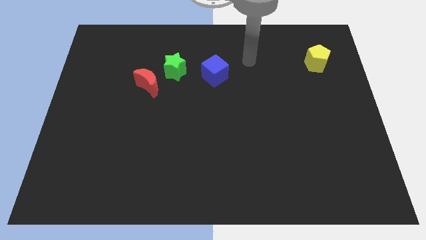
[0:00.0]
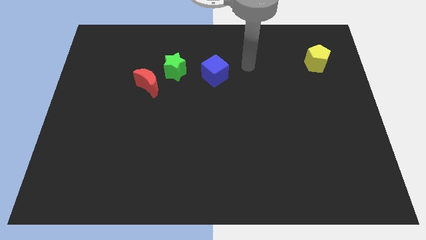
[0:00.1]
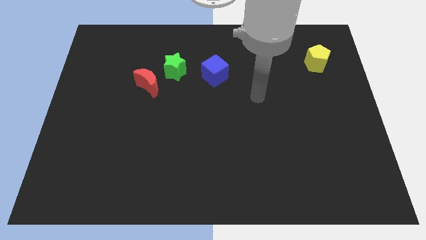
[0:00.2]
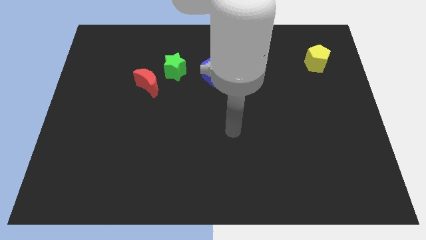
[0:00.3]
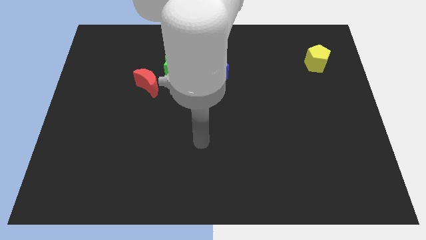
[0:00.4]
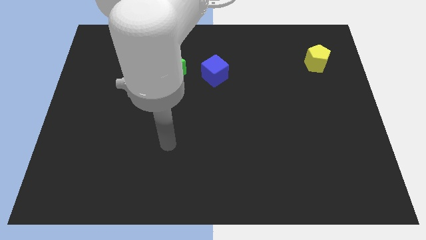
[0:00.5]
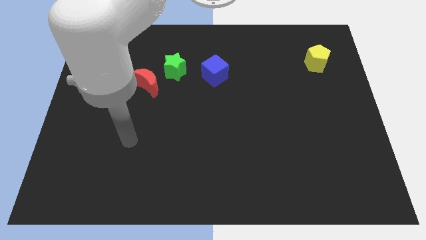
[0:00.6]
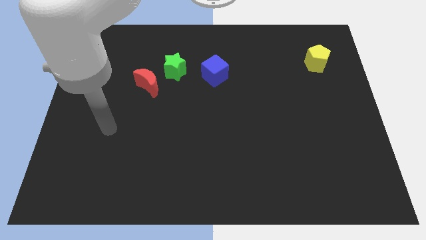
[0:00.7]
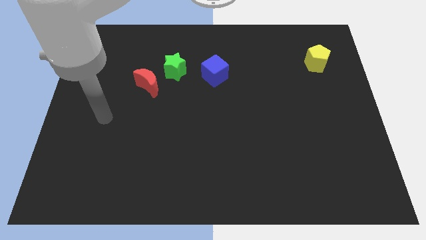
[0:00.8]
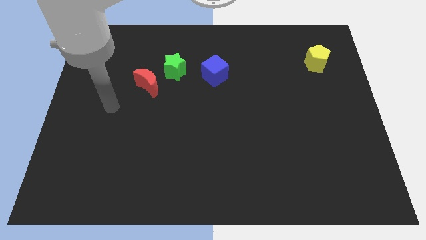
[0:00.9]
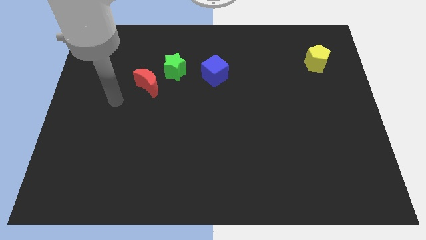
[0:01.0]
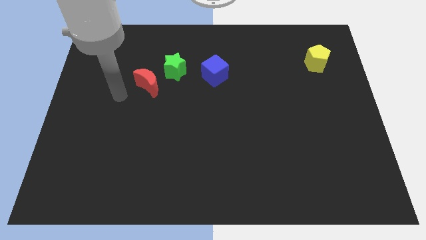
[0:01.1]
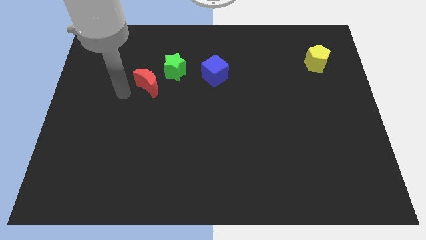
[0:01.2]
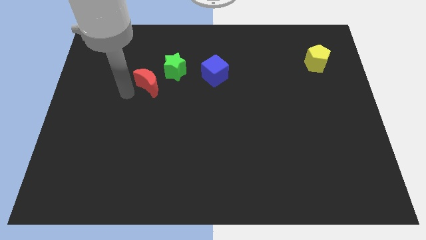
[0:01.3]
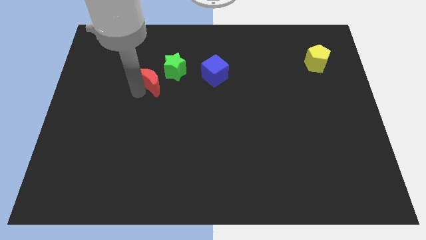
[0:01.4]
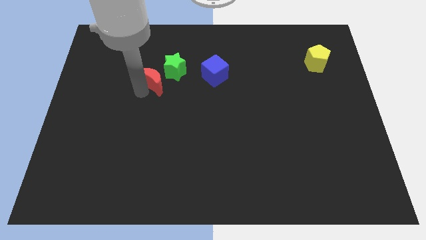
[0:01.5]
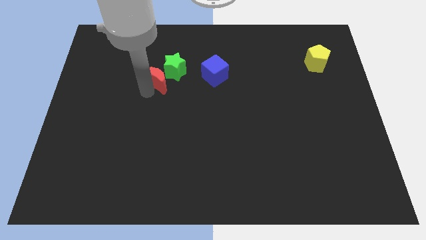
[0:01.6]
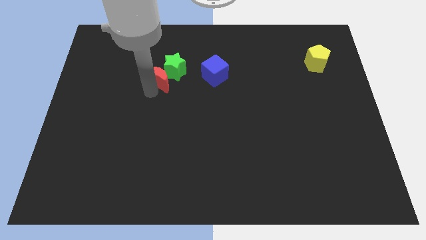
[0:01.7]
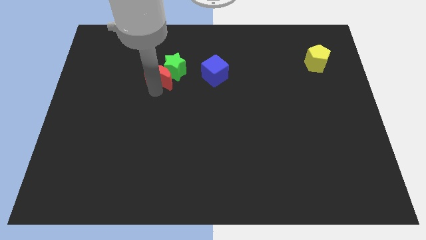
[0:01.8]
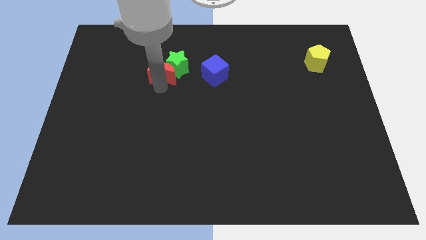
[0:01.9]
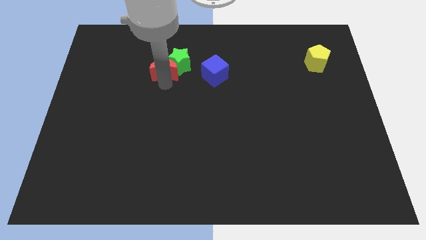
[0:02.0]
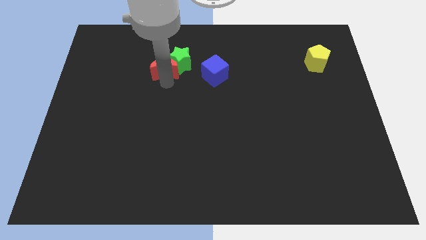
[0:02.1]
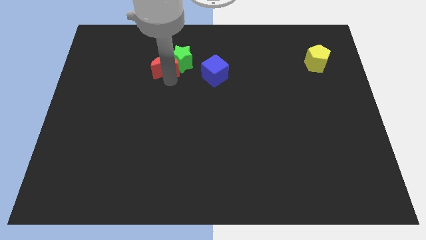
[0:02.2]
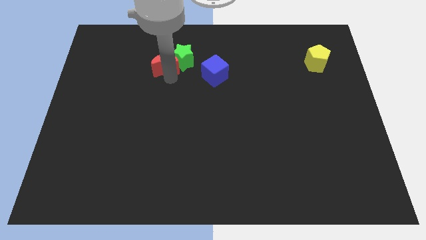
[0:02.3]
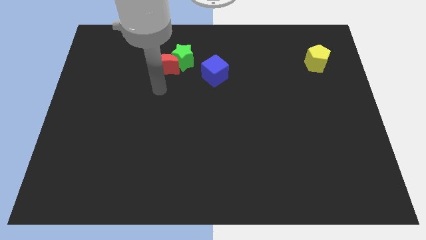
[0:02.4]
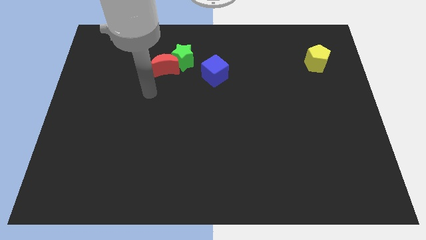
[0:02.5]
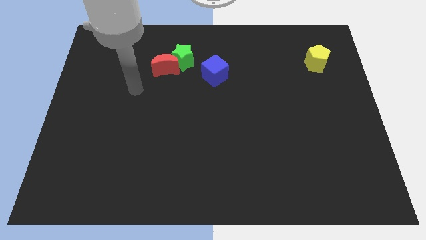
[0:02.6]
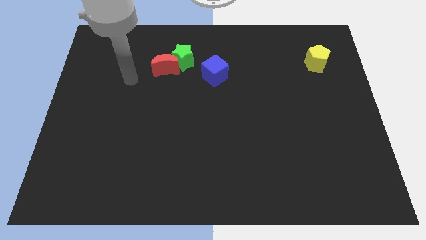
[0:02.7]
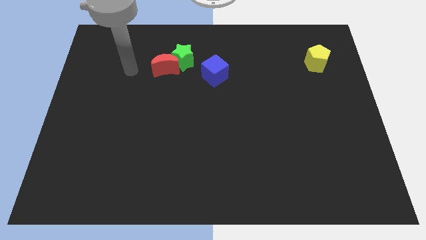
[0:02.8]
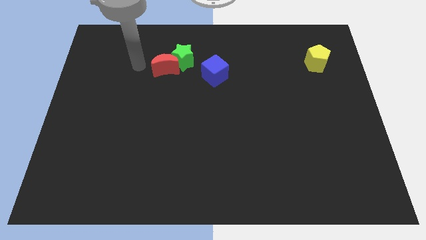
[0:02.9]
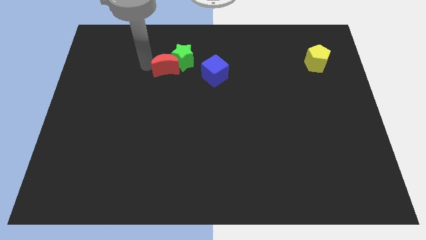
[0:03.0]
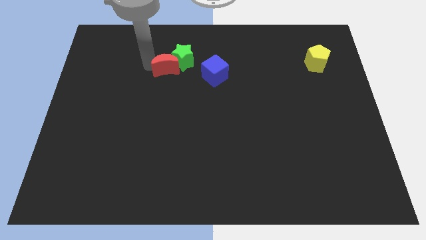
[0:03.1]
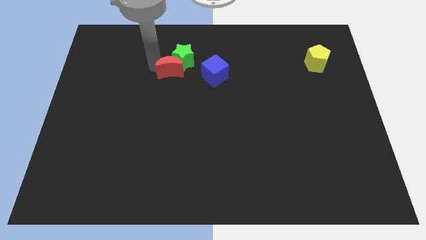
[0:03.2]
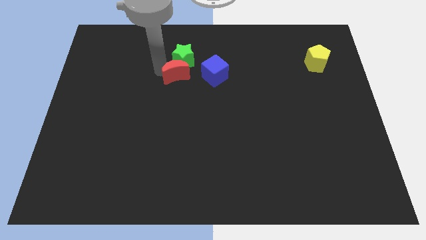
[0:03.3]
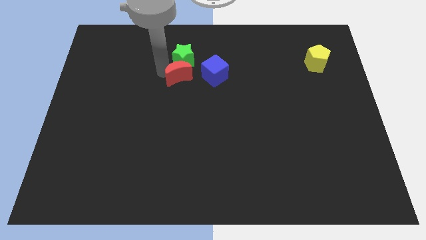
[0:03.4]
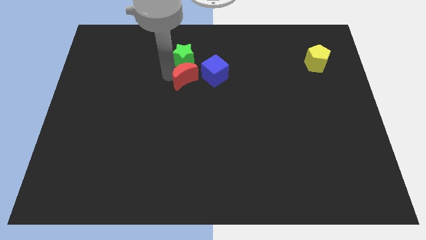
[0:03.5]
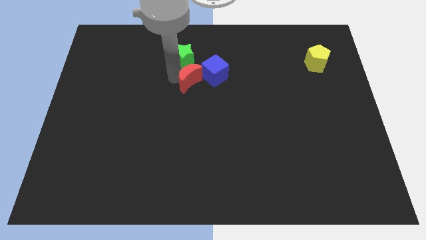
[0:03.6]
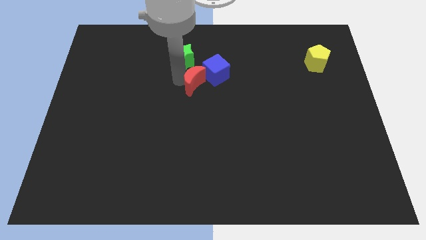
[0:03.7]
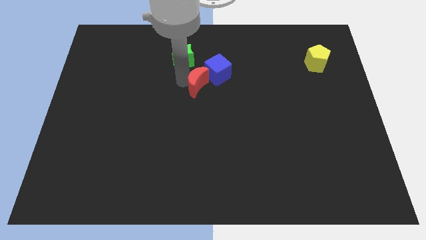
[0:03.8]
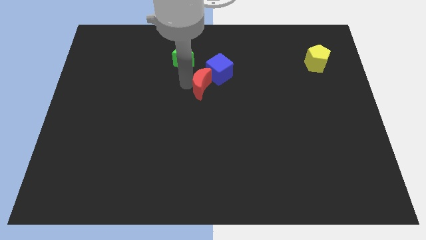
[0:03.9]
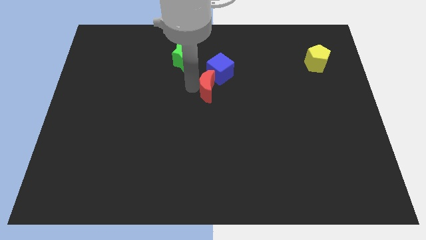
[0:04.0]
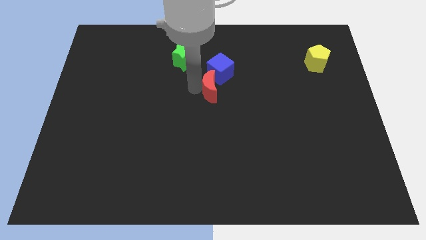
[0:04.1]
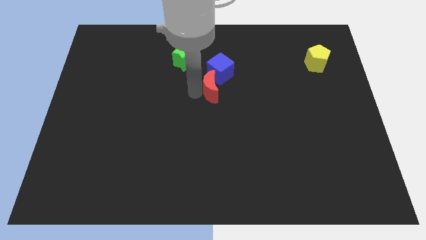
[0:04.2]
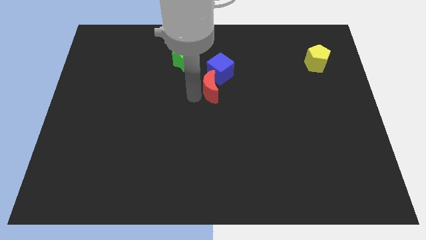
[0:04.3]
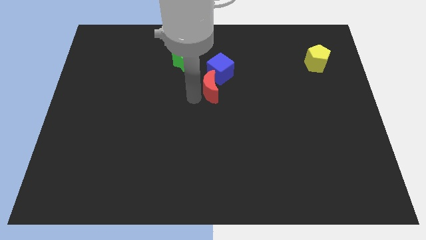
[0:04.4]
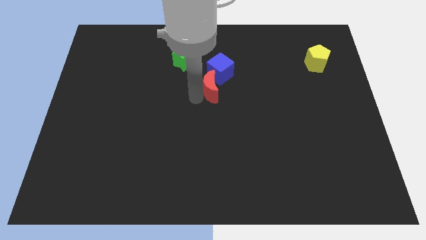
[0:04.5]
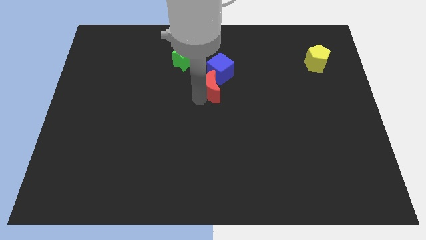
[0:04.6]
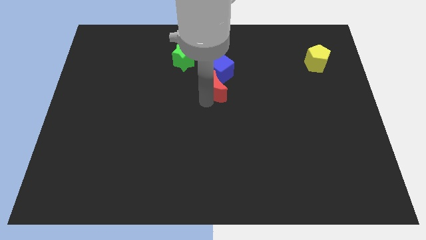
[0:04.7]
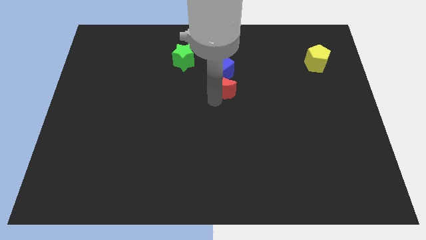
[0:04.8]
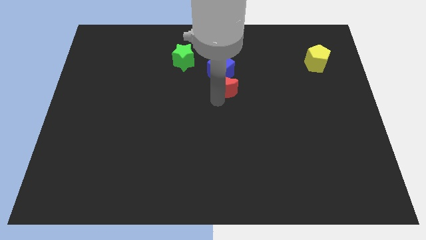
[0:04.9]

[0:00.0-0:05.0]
push the red moon next to the cube

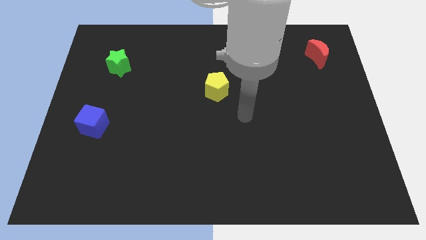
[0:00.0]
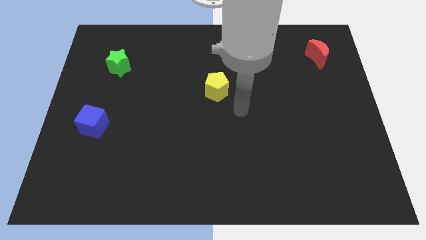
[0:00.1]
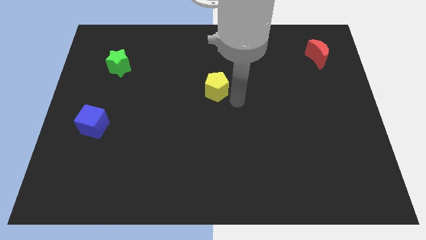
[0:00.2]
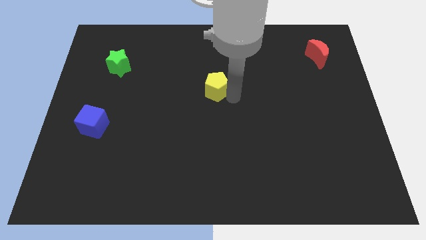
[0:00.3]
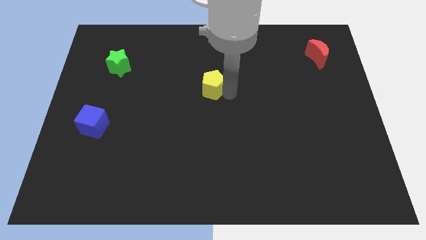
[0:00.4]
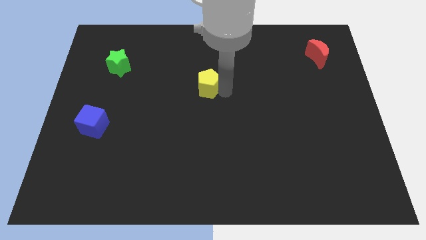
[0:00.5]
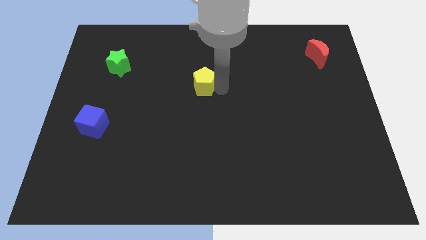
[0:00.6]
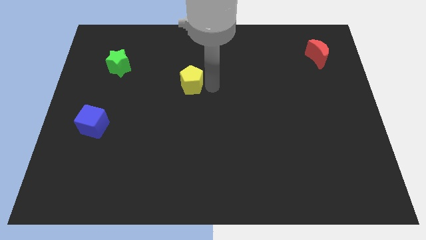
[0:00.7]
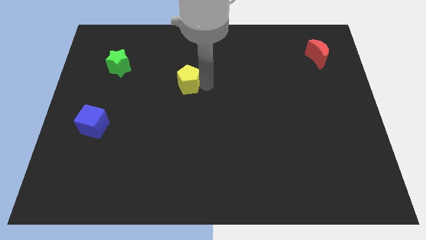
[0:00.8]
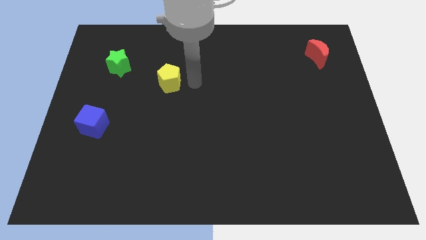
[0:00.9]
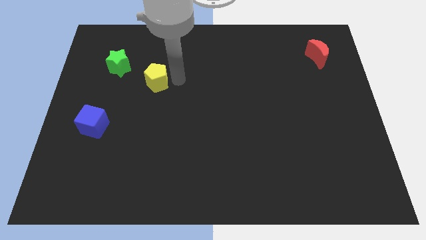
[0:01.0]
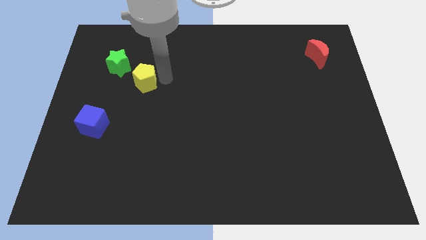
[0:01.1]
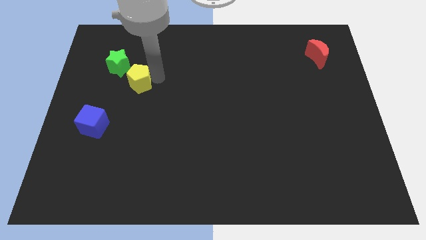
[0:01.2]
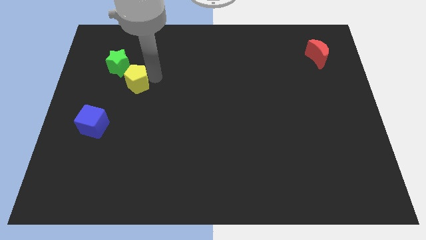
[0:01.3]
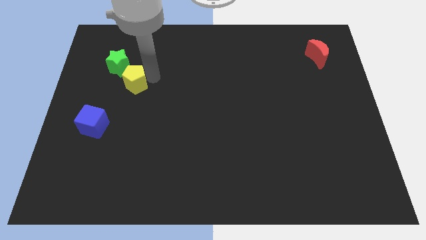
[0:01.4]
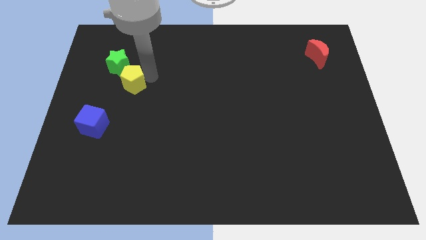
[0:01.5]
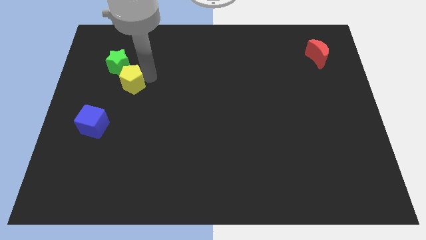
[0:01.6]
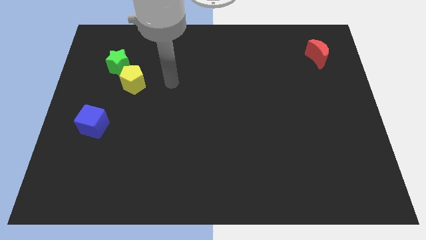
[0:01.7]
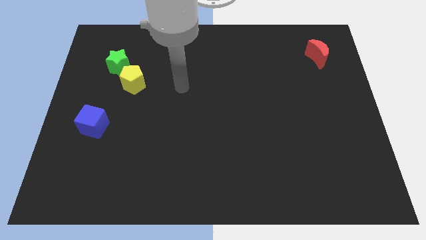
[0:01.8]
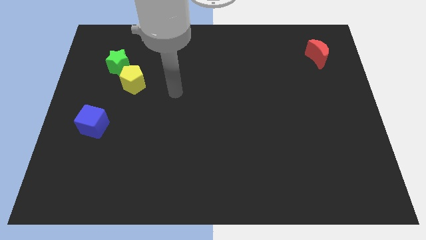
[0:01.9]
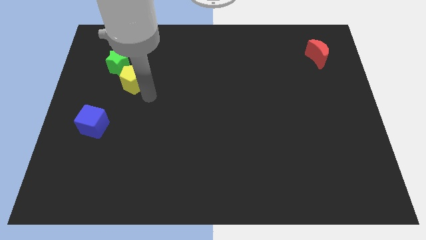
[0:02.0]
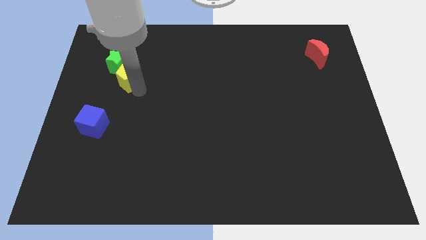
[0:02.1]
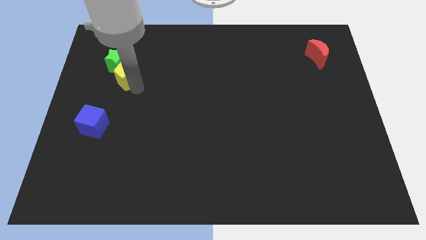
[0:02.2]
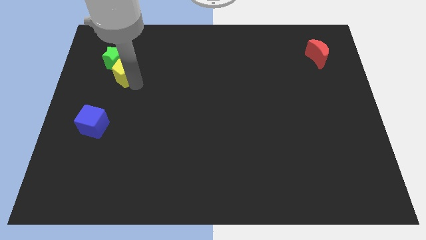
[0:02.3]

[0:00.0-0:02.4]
slide the yellow pentagon close to the green star

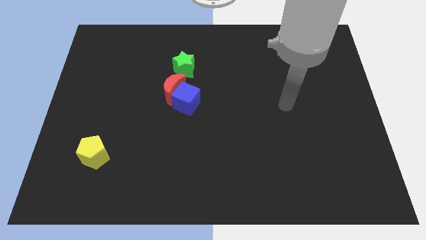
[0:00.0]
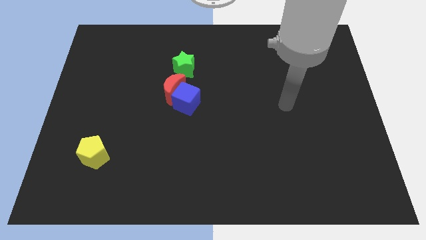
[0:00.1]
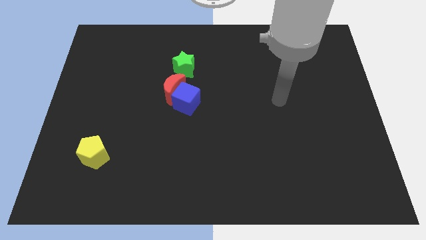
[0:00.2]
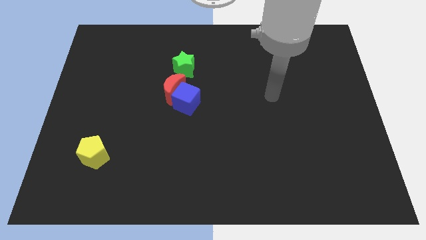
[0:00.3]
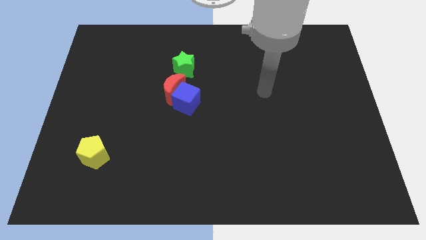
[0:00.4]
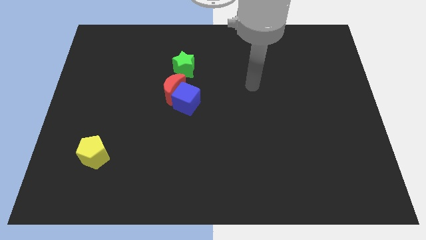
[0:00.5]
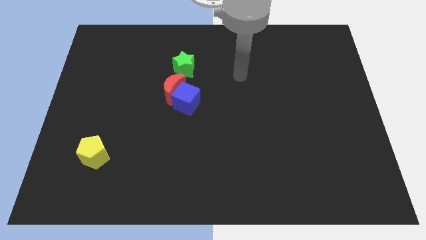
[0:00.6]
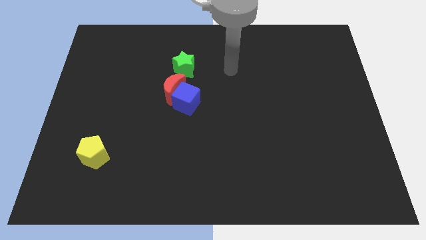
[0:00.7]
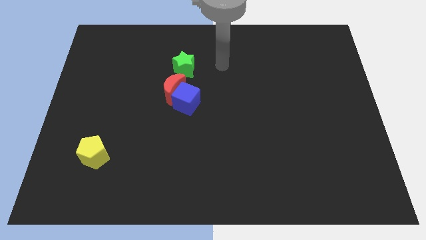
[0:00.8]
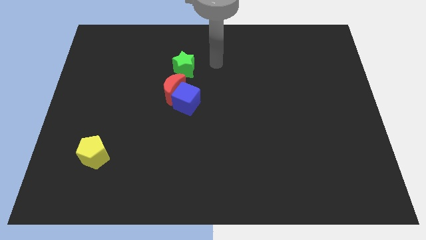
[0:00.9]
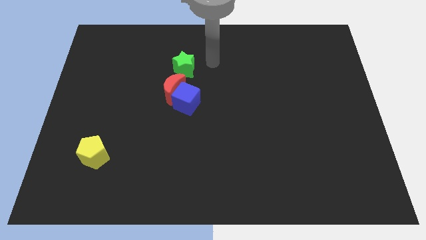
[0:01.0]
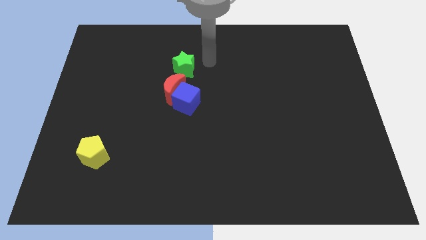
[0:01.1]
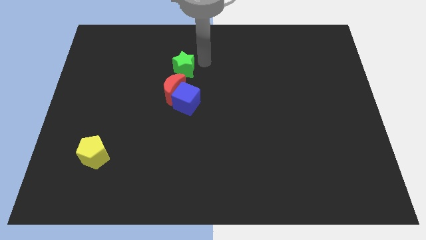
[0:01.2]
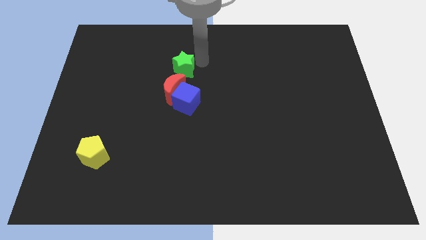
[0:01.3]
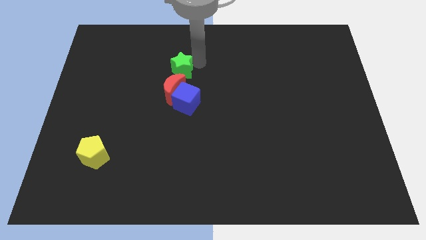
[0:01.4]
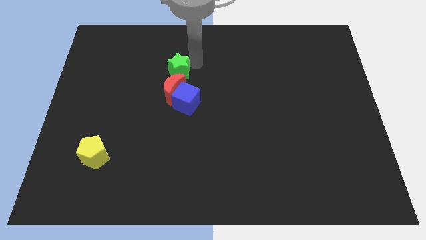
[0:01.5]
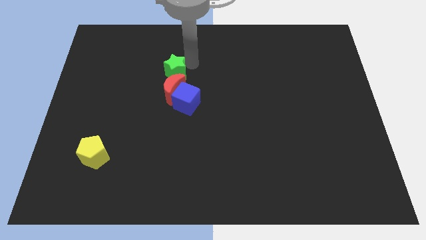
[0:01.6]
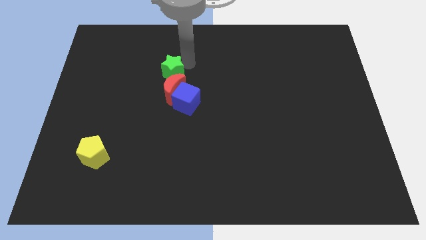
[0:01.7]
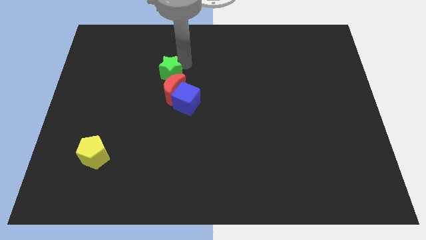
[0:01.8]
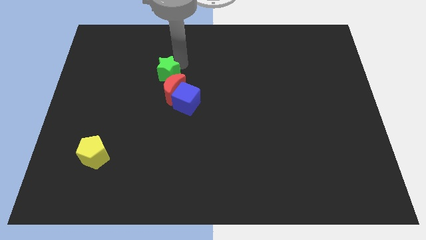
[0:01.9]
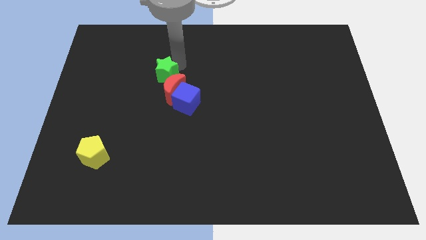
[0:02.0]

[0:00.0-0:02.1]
move the green block towards the red moon
